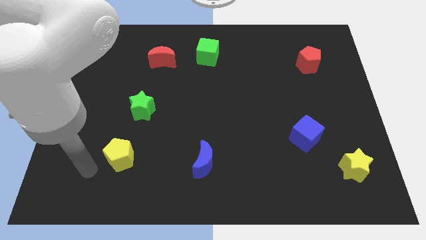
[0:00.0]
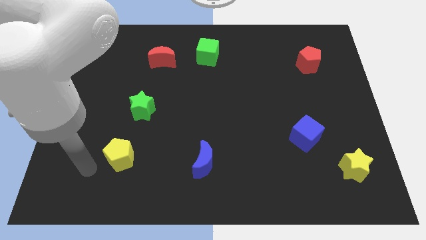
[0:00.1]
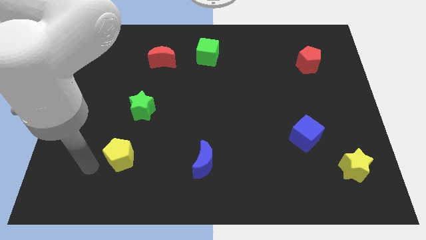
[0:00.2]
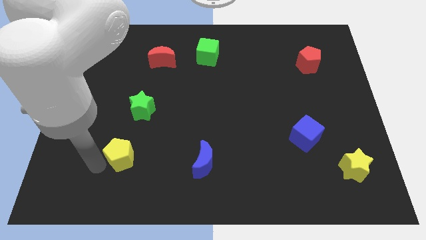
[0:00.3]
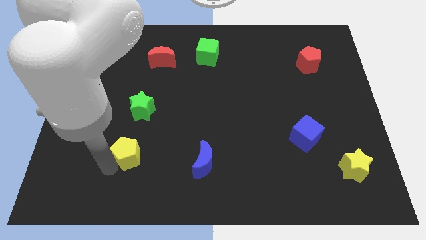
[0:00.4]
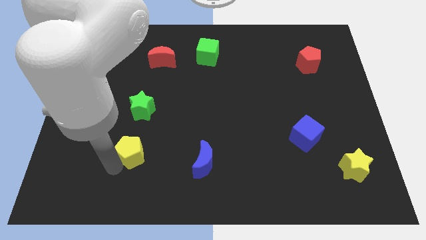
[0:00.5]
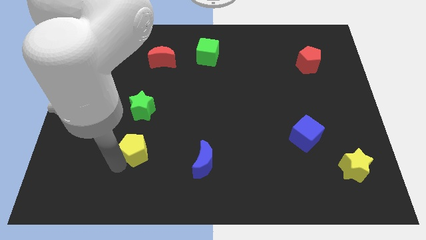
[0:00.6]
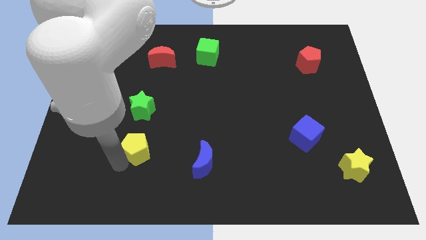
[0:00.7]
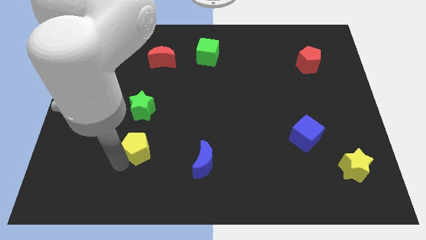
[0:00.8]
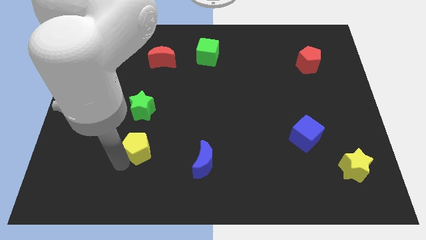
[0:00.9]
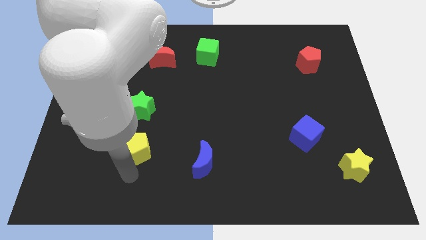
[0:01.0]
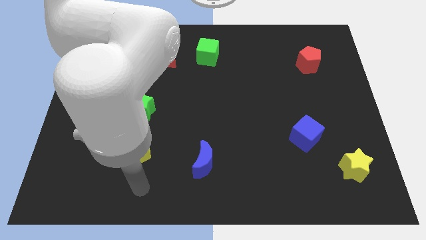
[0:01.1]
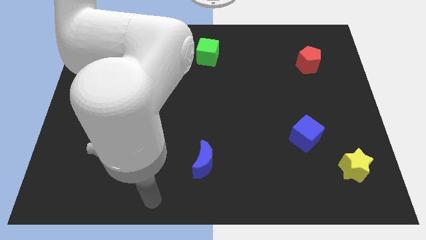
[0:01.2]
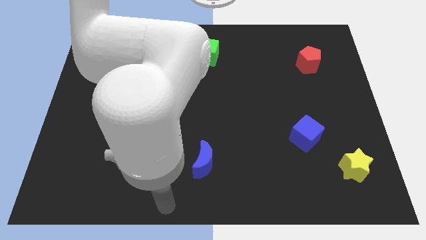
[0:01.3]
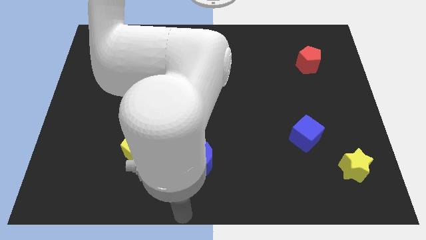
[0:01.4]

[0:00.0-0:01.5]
put the yellow pentagon underneath the green star

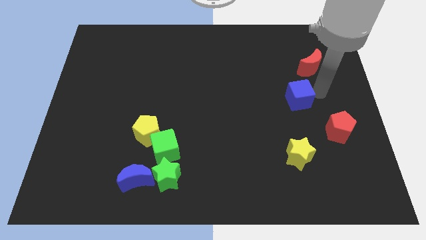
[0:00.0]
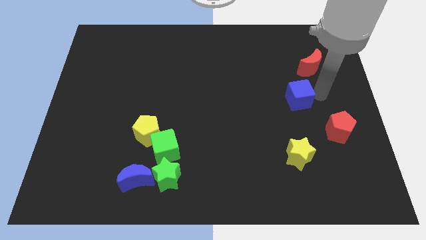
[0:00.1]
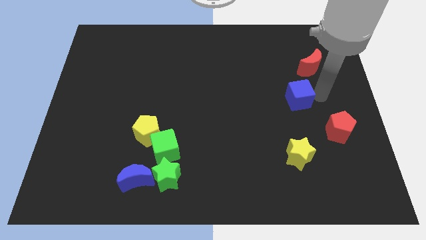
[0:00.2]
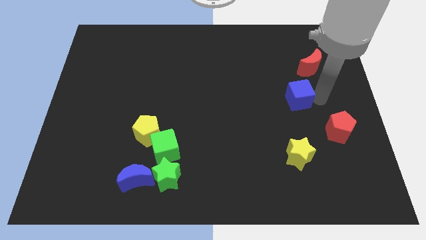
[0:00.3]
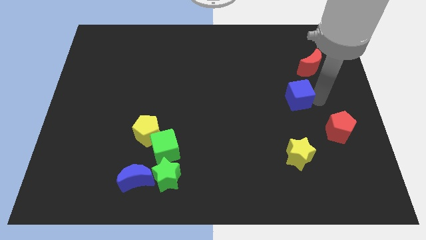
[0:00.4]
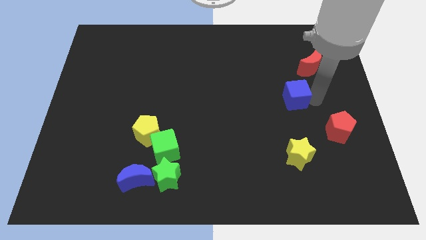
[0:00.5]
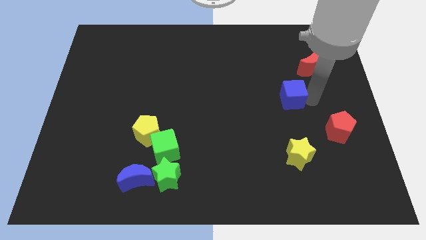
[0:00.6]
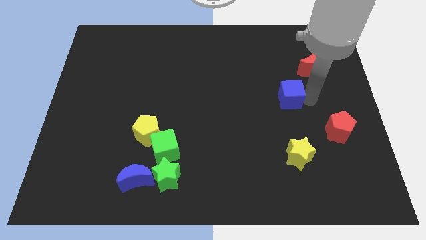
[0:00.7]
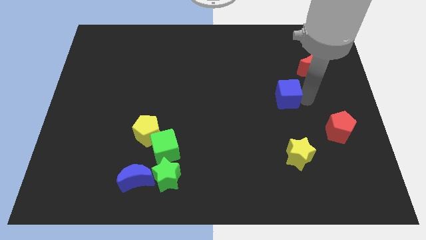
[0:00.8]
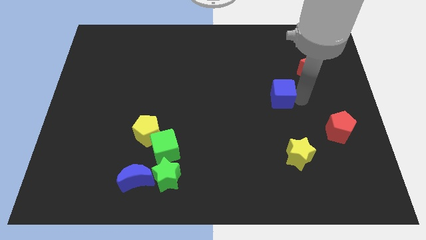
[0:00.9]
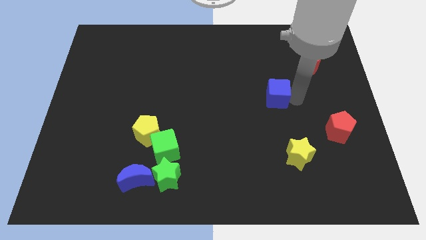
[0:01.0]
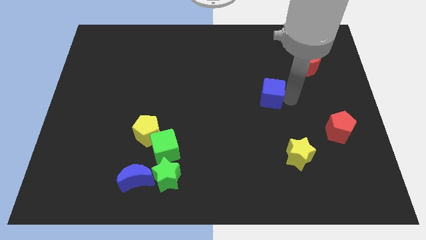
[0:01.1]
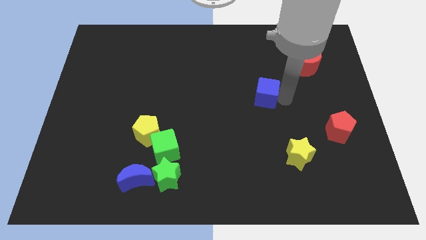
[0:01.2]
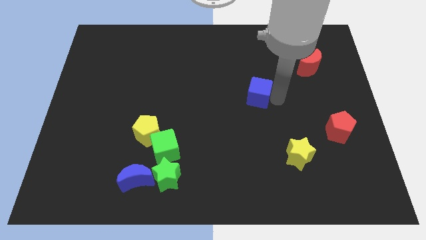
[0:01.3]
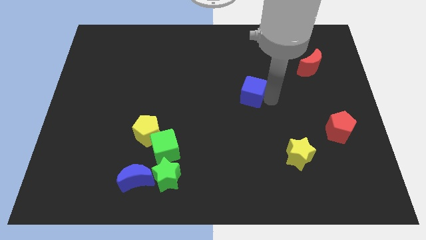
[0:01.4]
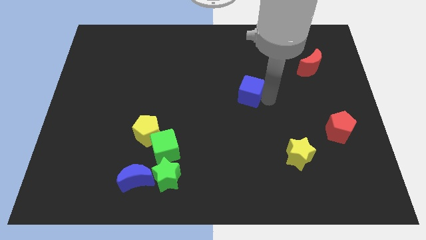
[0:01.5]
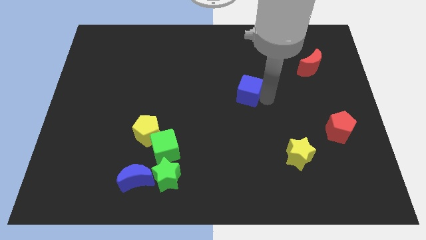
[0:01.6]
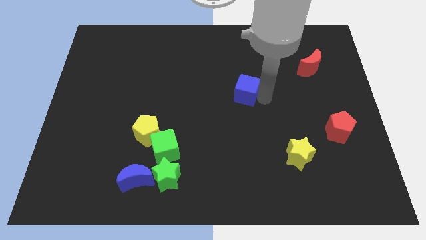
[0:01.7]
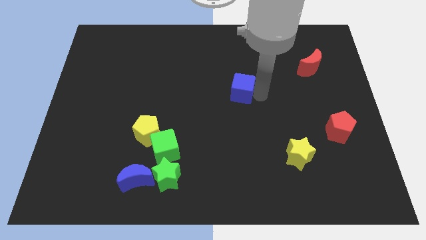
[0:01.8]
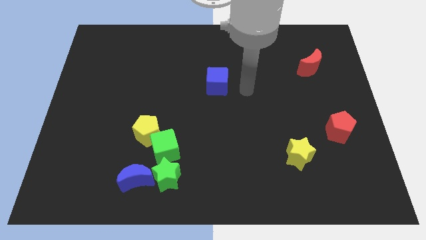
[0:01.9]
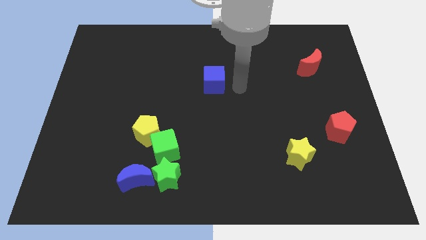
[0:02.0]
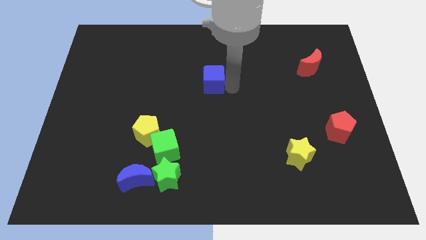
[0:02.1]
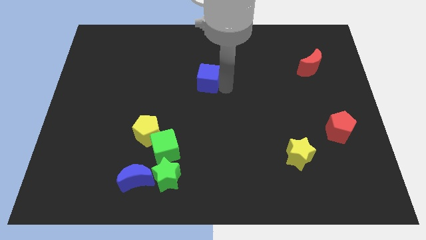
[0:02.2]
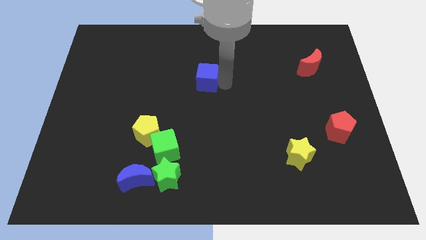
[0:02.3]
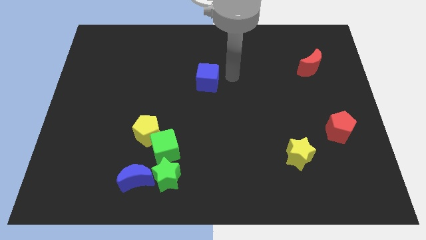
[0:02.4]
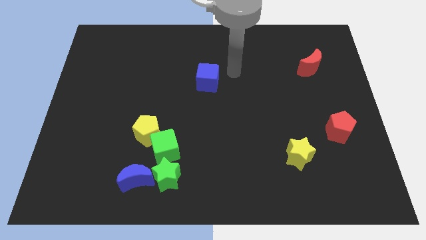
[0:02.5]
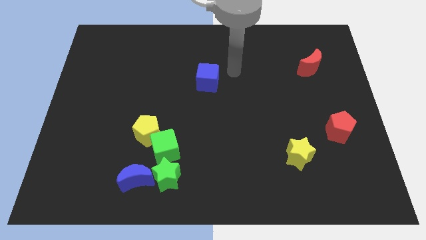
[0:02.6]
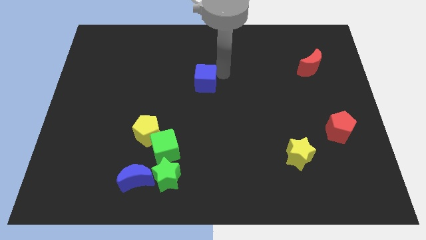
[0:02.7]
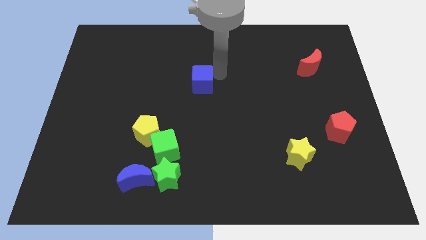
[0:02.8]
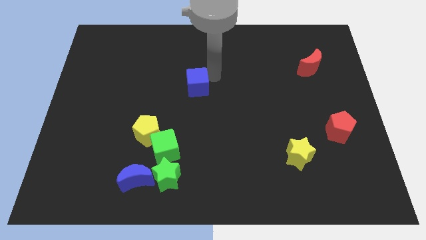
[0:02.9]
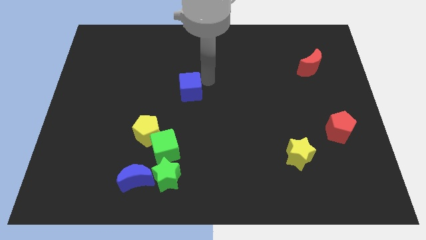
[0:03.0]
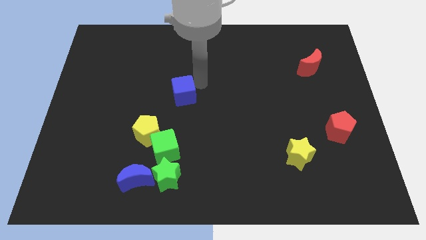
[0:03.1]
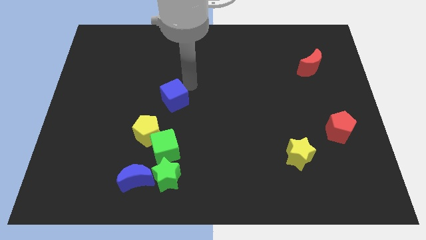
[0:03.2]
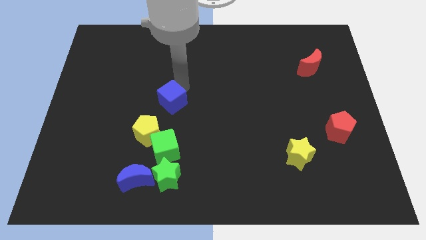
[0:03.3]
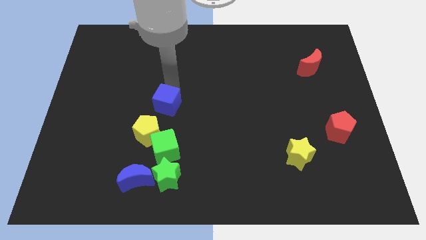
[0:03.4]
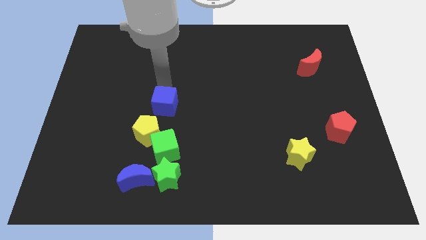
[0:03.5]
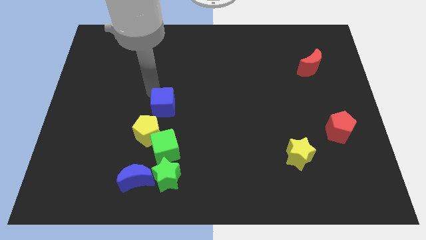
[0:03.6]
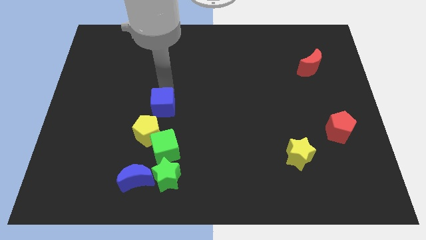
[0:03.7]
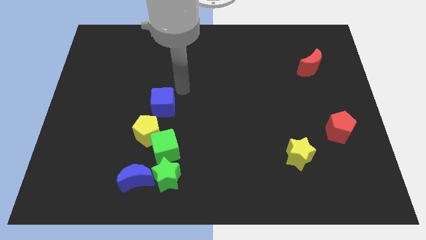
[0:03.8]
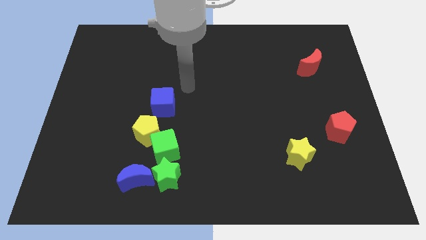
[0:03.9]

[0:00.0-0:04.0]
push the blue cube to the left side of the board

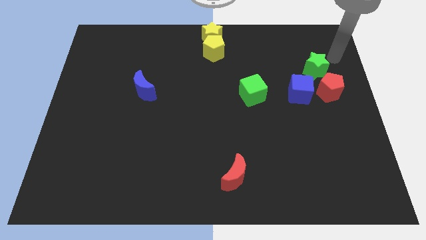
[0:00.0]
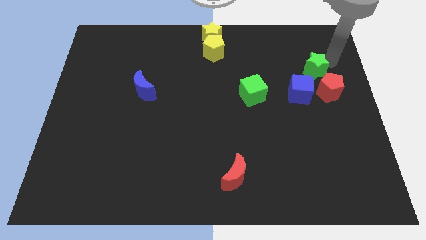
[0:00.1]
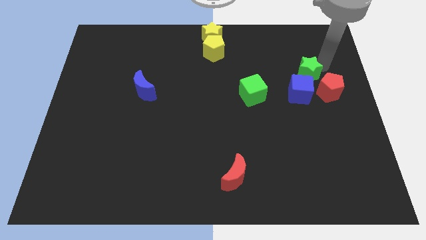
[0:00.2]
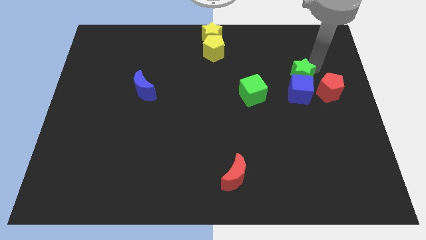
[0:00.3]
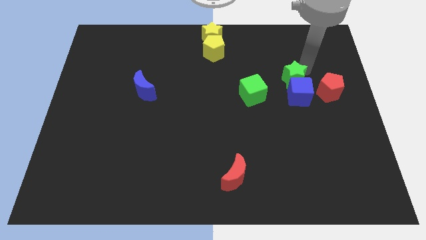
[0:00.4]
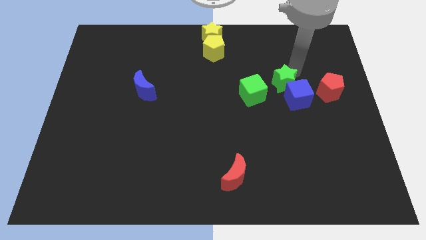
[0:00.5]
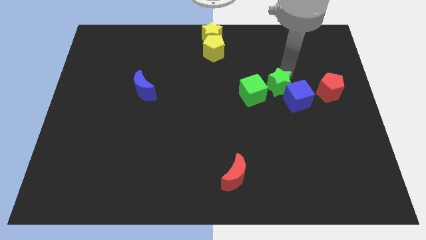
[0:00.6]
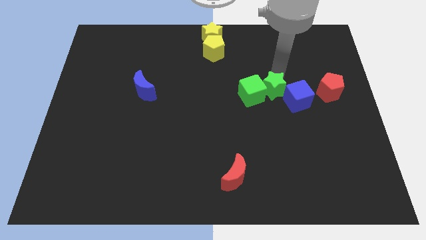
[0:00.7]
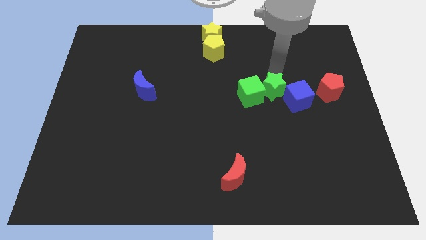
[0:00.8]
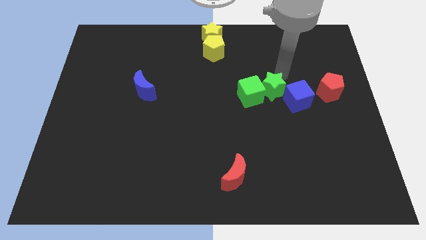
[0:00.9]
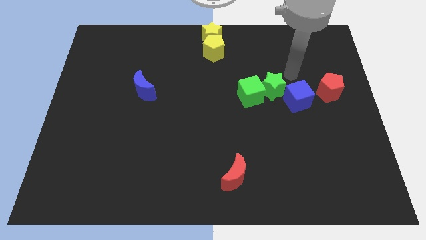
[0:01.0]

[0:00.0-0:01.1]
push green star into green cube

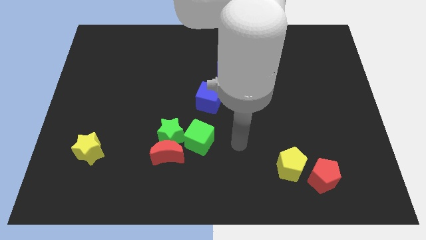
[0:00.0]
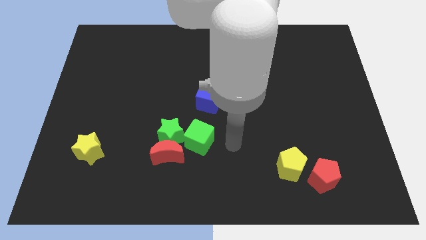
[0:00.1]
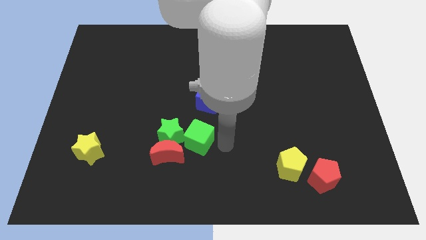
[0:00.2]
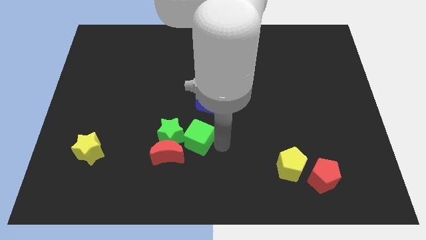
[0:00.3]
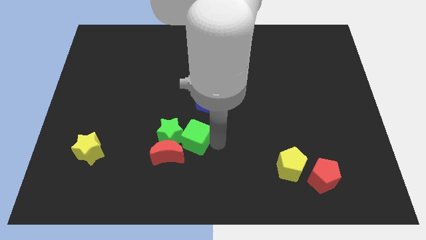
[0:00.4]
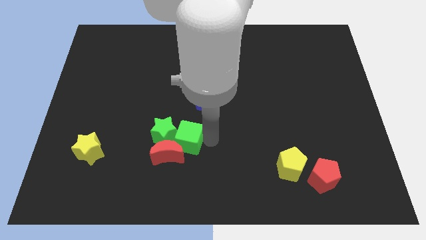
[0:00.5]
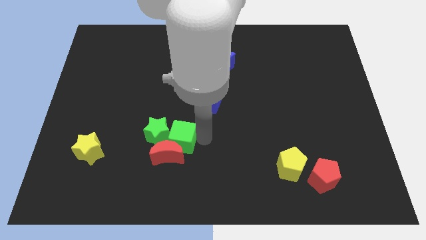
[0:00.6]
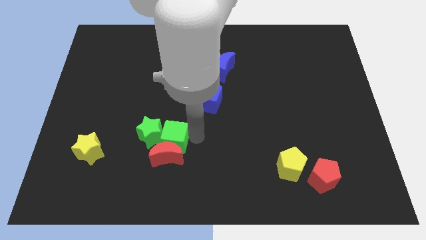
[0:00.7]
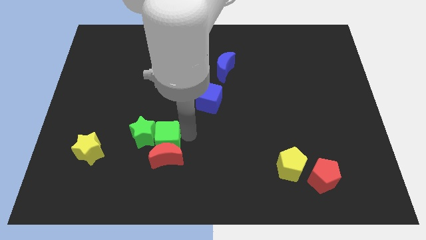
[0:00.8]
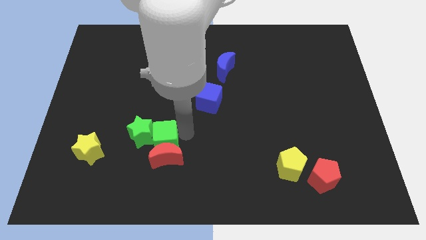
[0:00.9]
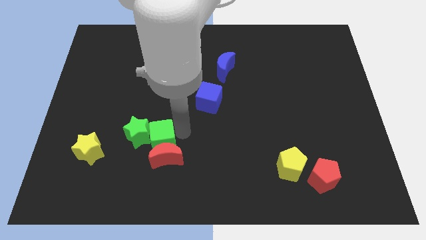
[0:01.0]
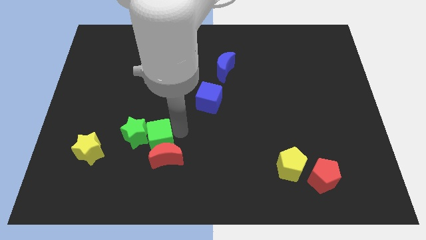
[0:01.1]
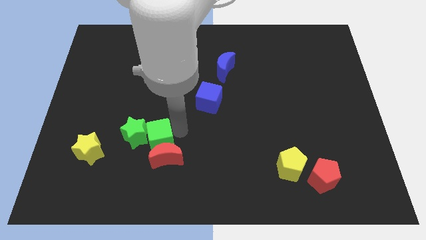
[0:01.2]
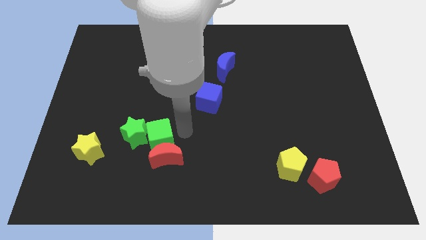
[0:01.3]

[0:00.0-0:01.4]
move the green cube and green star to the left

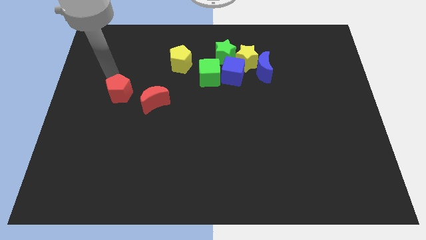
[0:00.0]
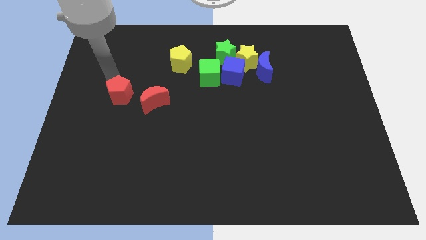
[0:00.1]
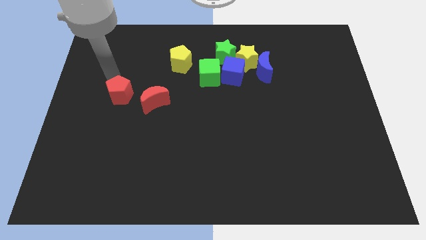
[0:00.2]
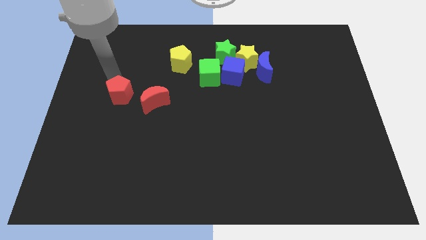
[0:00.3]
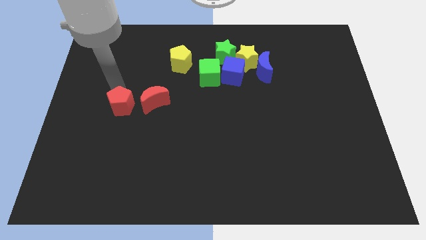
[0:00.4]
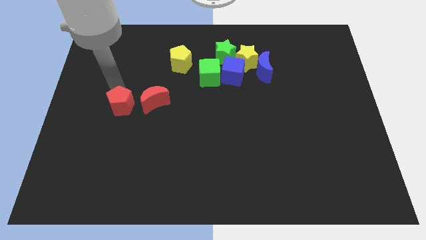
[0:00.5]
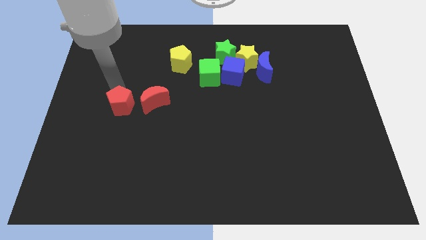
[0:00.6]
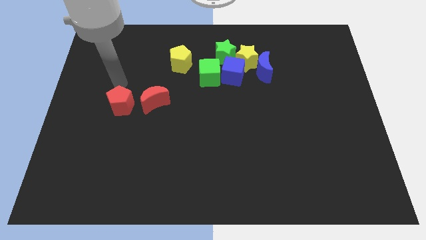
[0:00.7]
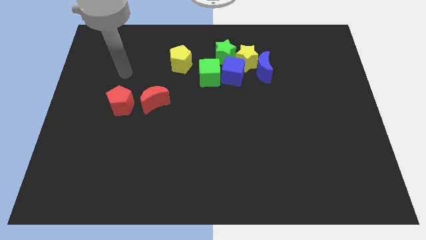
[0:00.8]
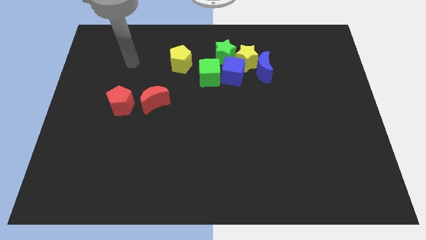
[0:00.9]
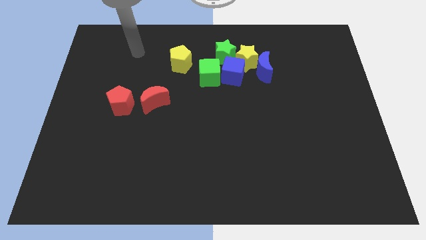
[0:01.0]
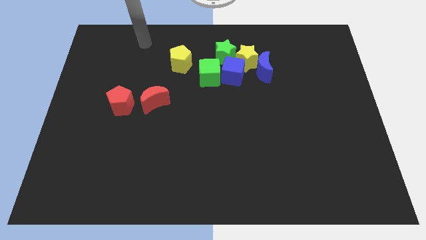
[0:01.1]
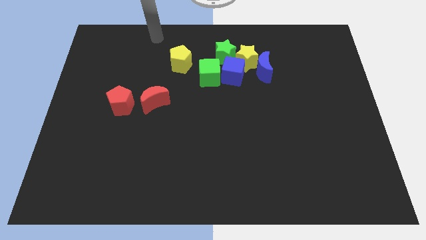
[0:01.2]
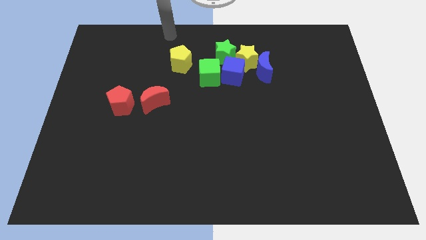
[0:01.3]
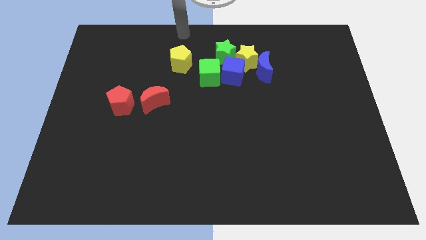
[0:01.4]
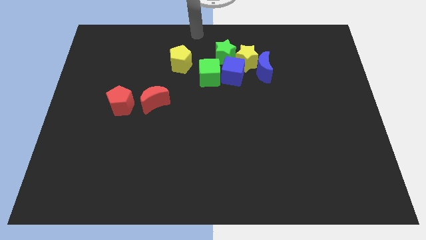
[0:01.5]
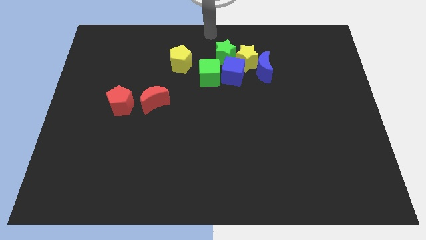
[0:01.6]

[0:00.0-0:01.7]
move the red pentagon to the left of red moon
